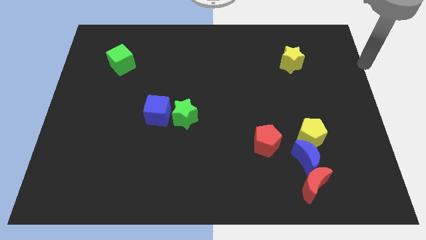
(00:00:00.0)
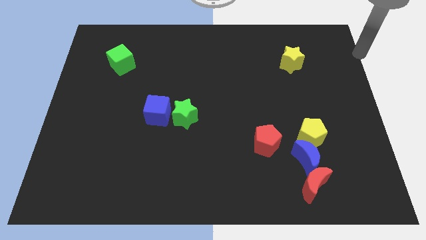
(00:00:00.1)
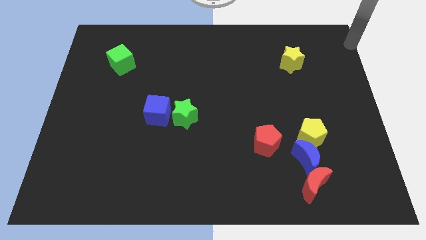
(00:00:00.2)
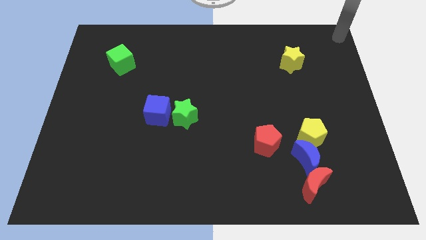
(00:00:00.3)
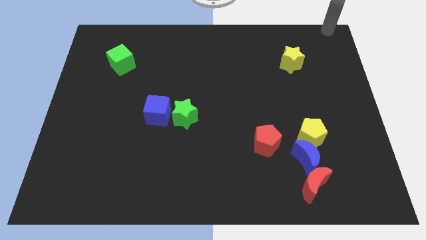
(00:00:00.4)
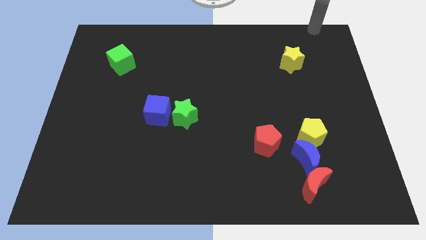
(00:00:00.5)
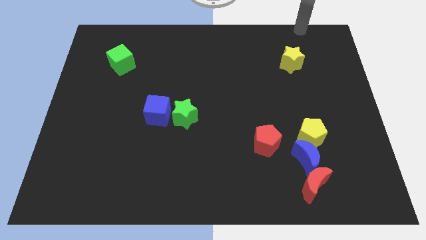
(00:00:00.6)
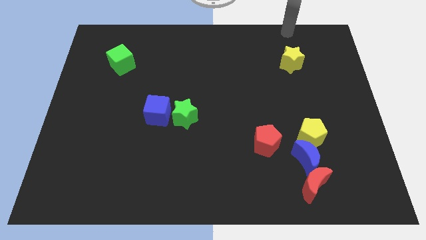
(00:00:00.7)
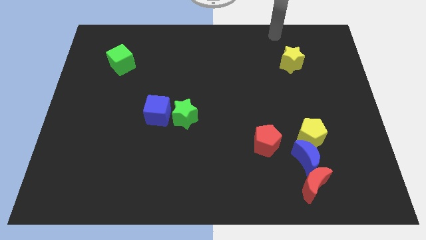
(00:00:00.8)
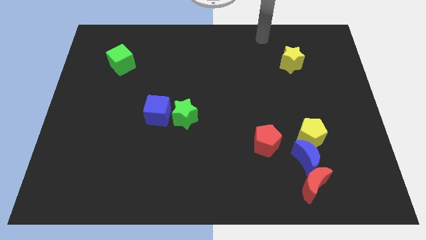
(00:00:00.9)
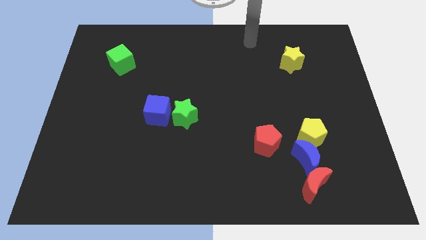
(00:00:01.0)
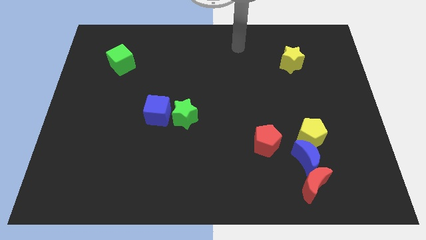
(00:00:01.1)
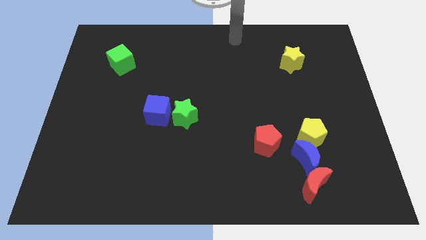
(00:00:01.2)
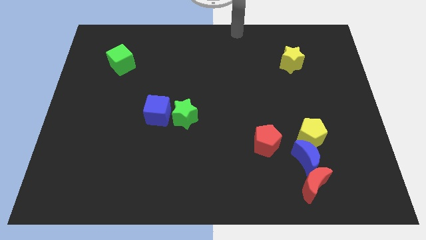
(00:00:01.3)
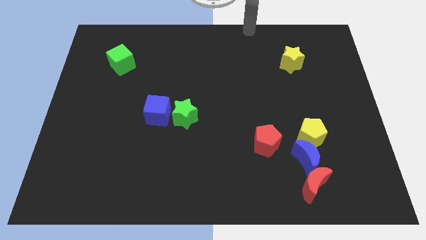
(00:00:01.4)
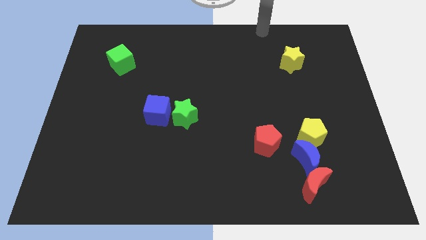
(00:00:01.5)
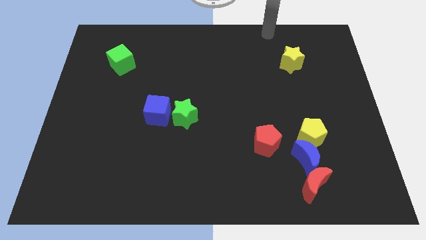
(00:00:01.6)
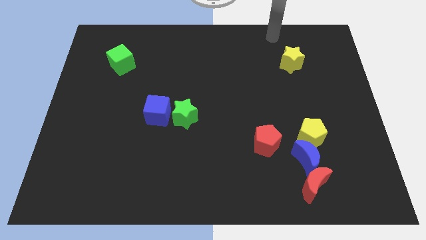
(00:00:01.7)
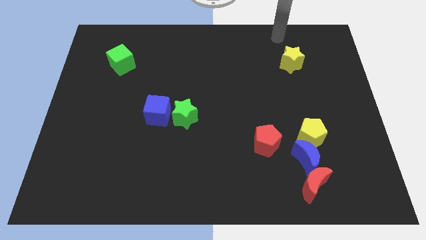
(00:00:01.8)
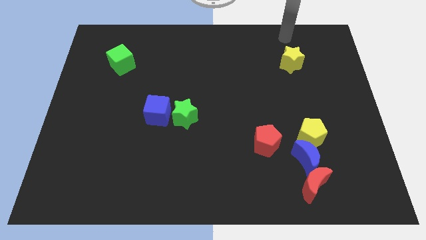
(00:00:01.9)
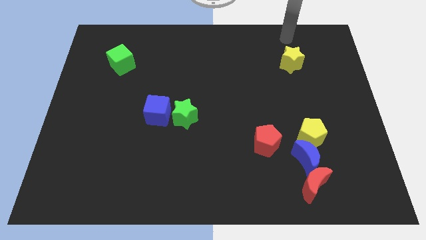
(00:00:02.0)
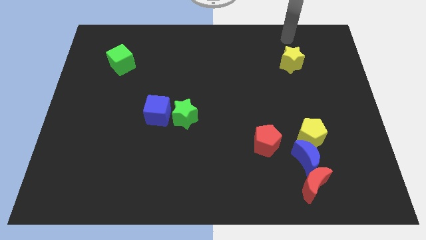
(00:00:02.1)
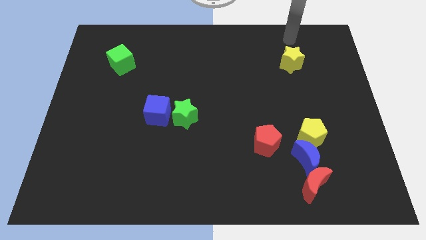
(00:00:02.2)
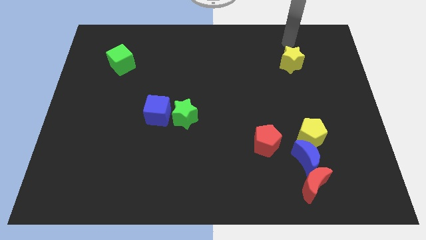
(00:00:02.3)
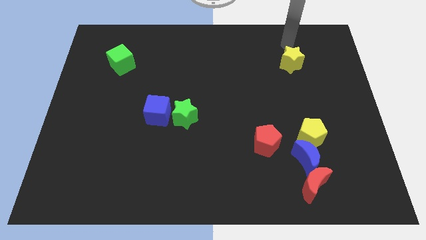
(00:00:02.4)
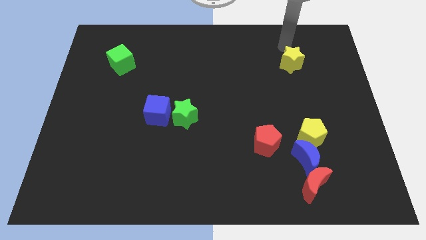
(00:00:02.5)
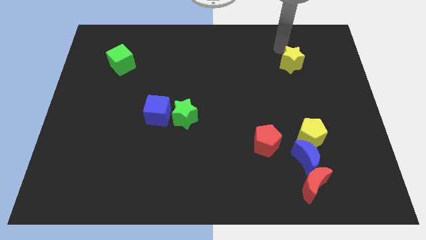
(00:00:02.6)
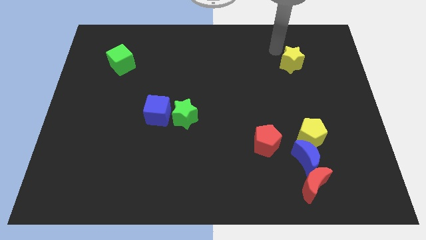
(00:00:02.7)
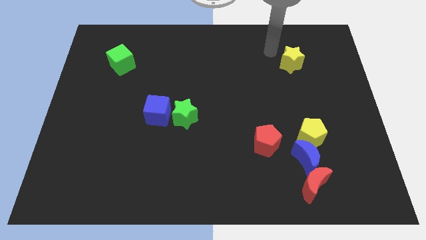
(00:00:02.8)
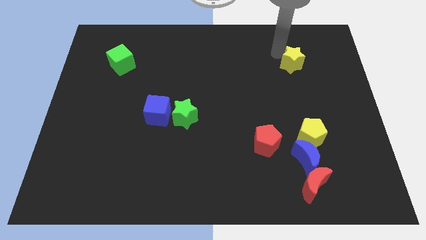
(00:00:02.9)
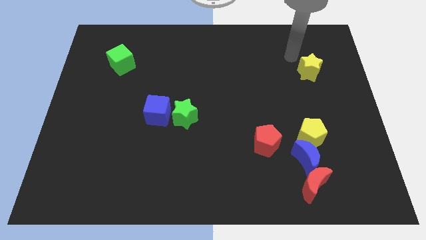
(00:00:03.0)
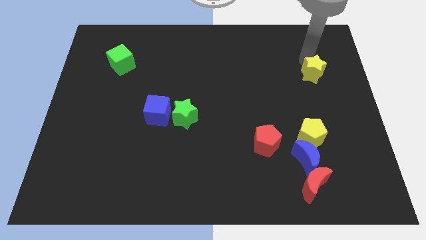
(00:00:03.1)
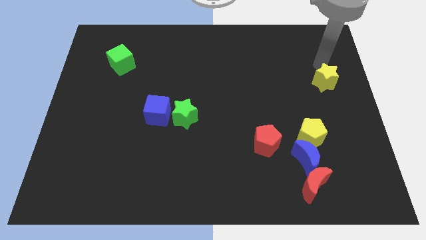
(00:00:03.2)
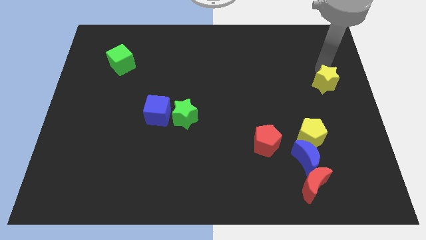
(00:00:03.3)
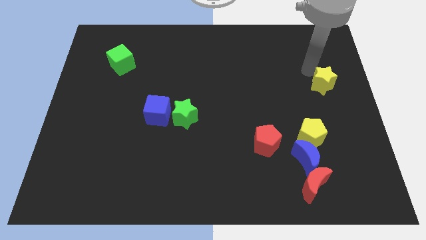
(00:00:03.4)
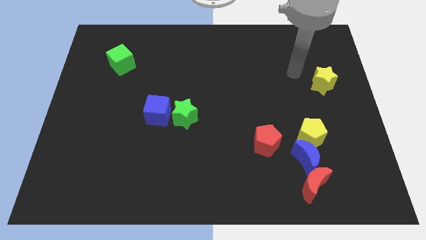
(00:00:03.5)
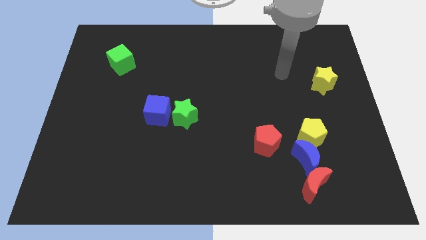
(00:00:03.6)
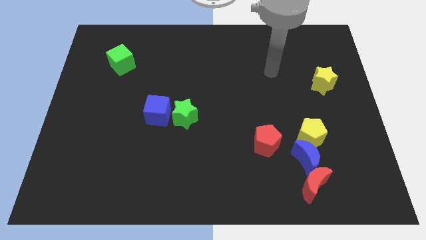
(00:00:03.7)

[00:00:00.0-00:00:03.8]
push the yellow star diagonally at the top right of the red pentagon

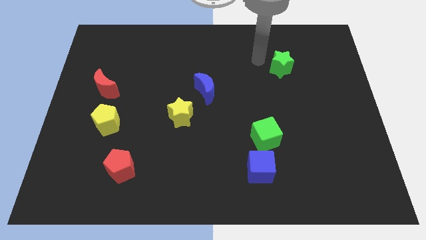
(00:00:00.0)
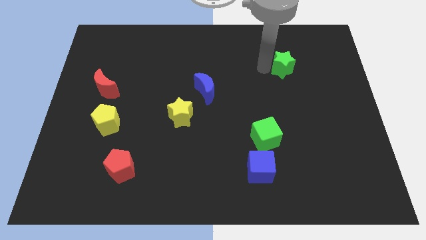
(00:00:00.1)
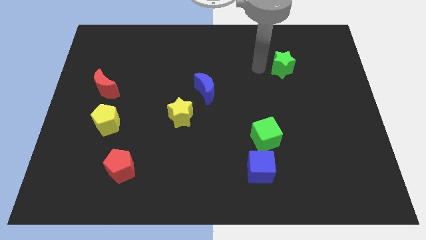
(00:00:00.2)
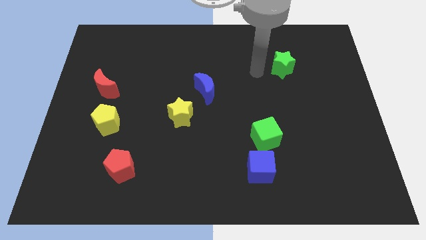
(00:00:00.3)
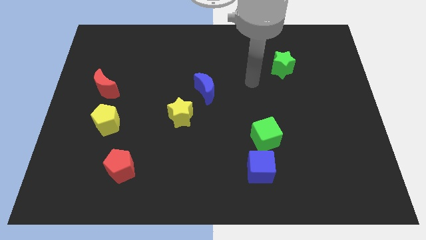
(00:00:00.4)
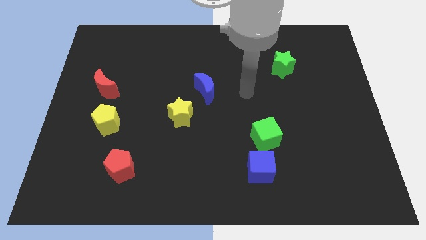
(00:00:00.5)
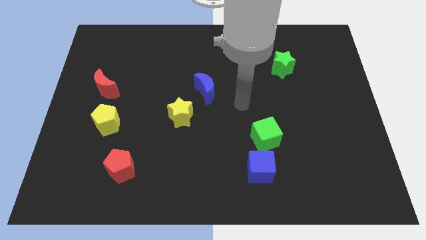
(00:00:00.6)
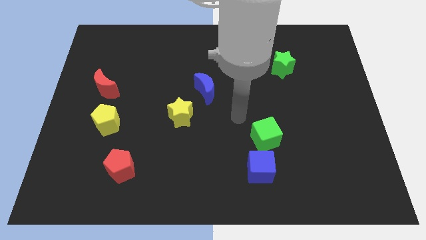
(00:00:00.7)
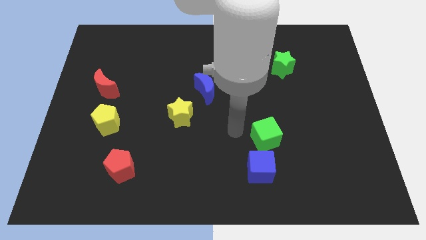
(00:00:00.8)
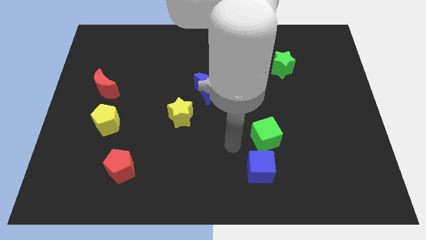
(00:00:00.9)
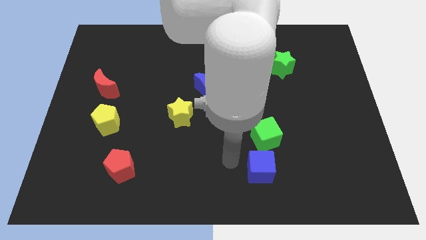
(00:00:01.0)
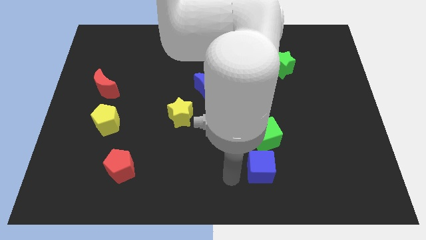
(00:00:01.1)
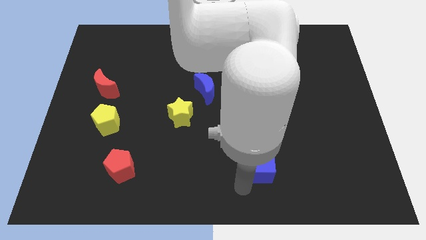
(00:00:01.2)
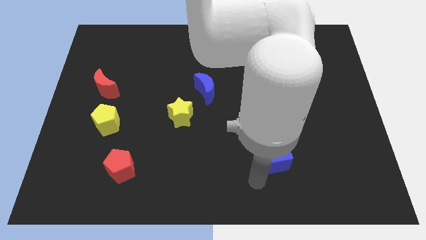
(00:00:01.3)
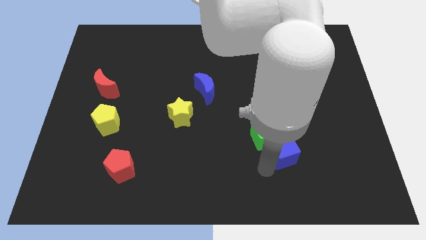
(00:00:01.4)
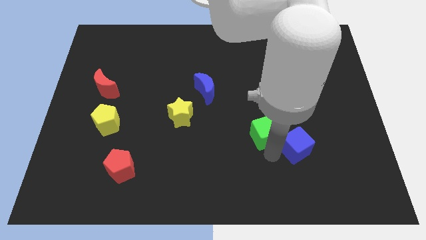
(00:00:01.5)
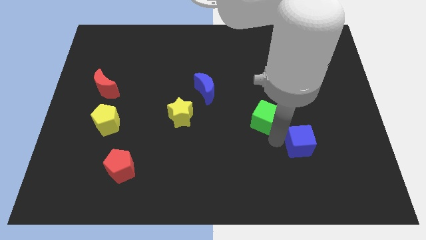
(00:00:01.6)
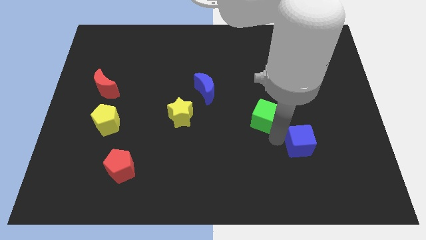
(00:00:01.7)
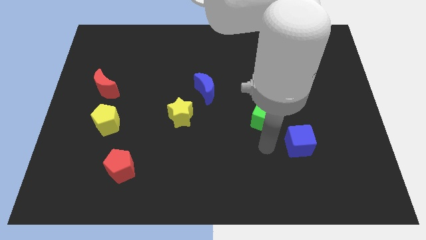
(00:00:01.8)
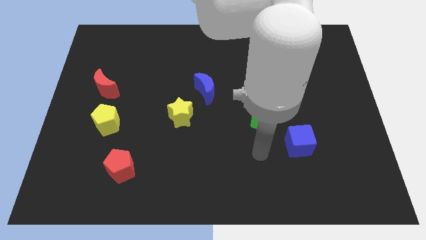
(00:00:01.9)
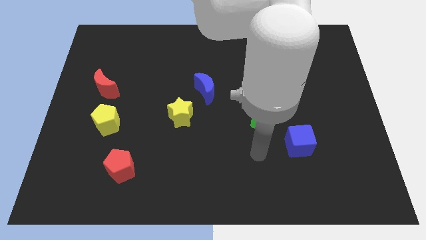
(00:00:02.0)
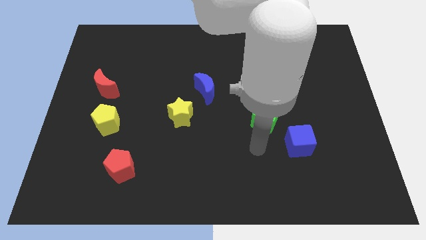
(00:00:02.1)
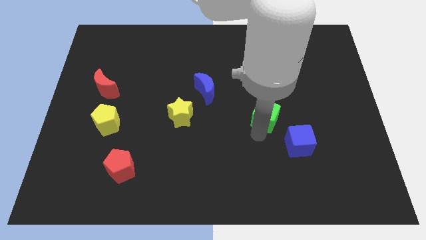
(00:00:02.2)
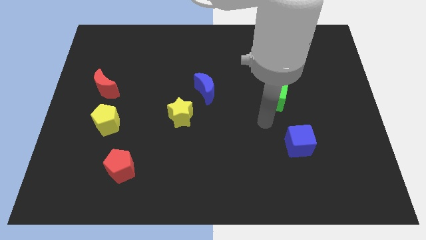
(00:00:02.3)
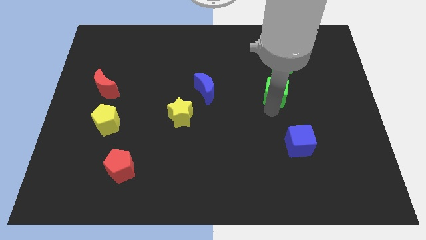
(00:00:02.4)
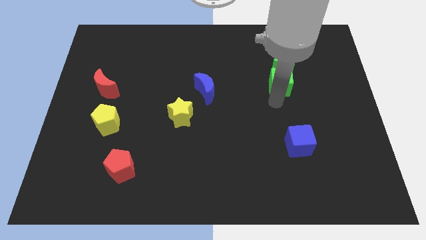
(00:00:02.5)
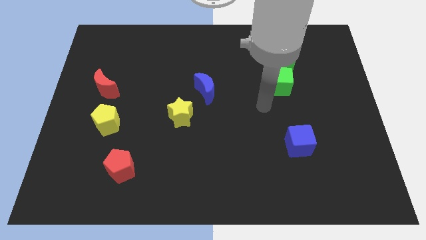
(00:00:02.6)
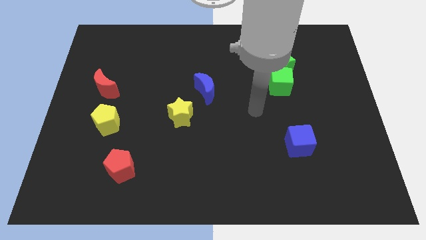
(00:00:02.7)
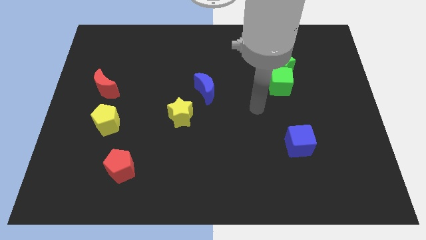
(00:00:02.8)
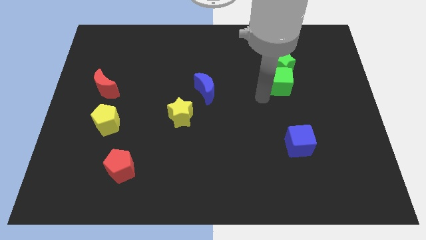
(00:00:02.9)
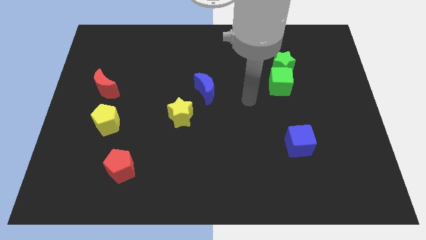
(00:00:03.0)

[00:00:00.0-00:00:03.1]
go and place the green cube below the green star

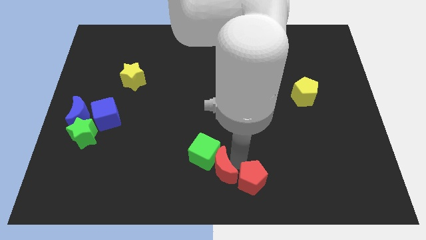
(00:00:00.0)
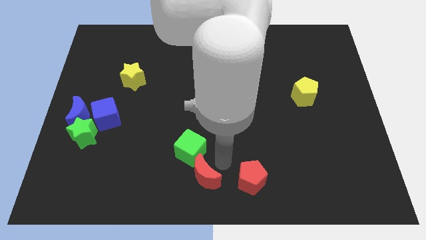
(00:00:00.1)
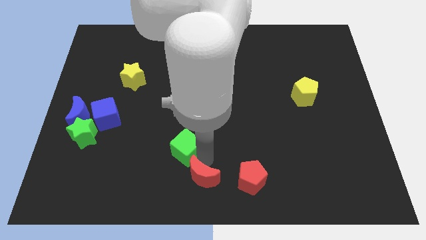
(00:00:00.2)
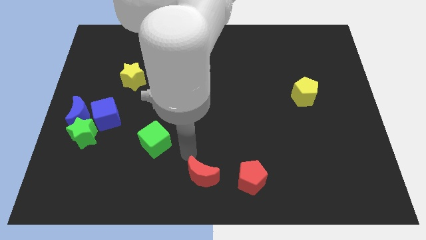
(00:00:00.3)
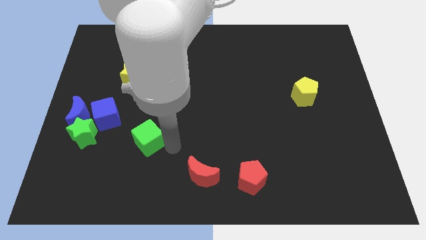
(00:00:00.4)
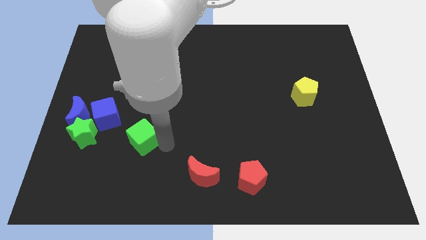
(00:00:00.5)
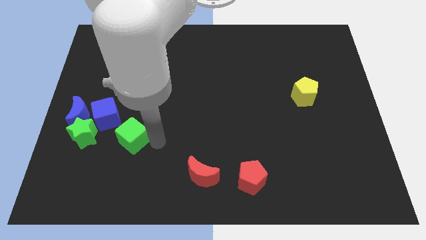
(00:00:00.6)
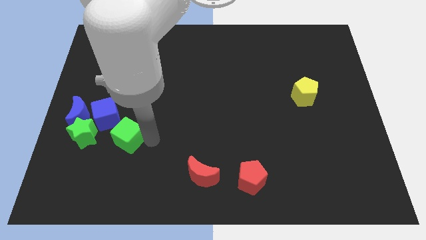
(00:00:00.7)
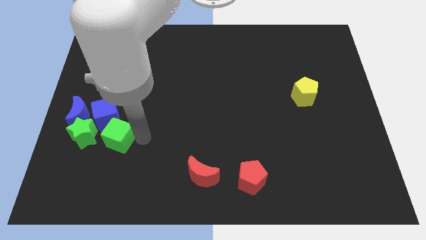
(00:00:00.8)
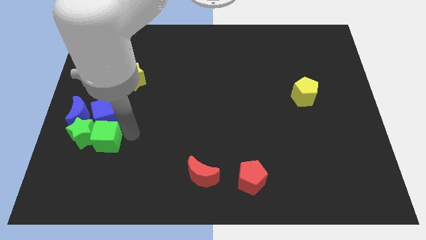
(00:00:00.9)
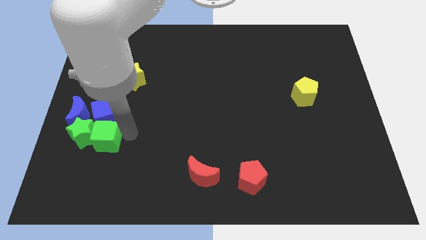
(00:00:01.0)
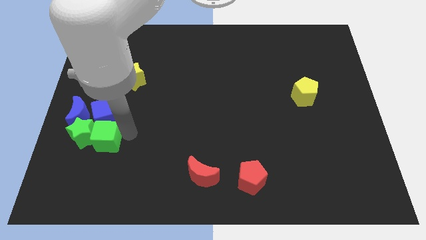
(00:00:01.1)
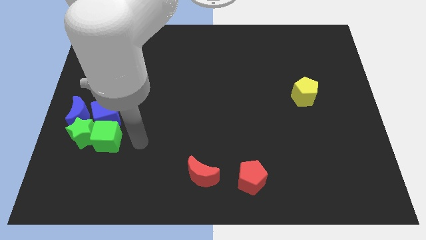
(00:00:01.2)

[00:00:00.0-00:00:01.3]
push the green cube into the green star

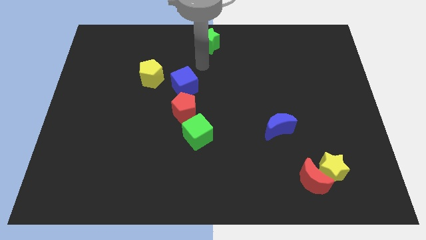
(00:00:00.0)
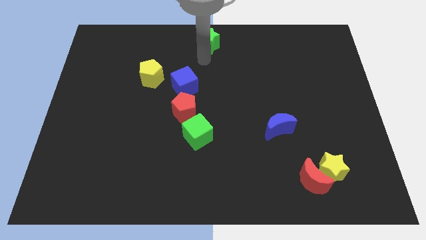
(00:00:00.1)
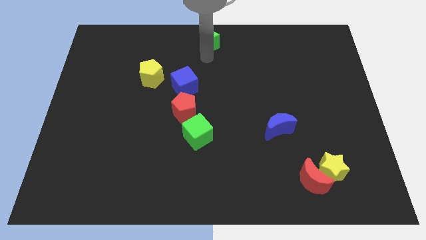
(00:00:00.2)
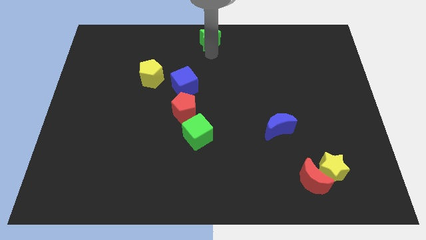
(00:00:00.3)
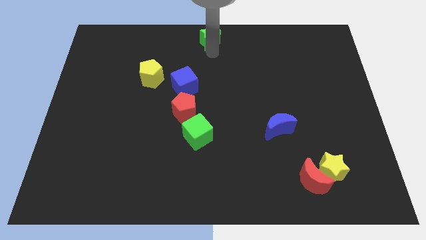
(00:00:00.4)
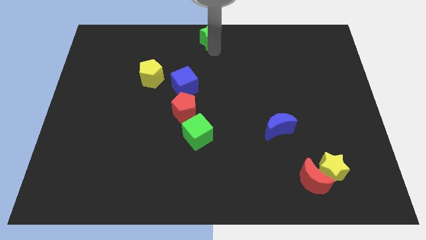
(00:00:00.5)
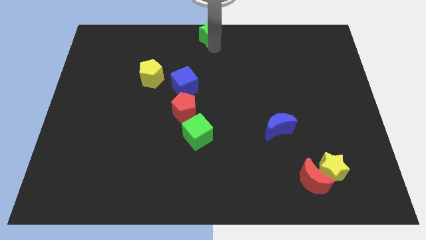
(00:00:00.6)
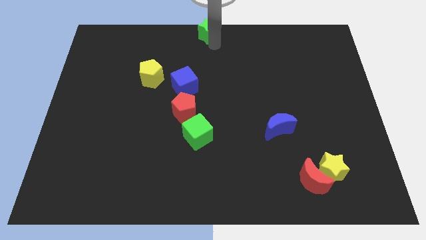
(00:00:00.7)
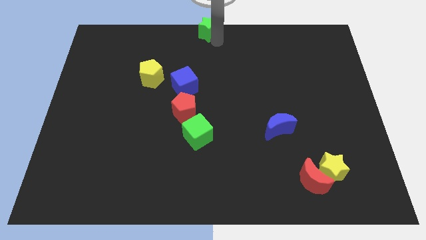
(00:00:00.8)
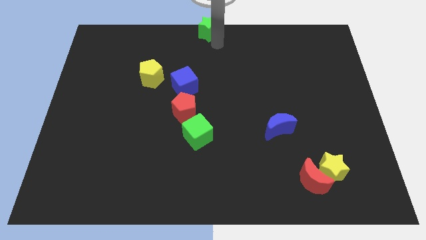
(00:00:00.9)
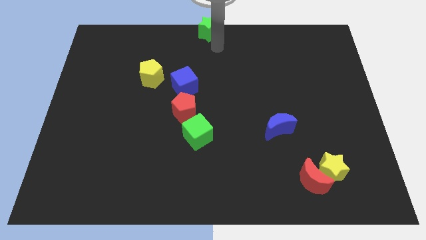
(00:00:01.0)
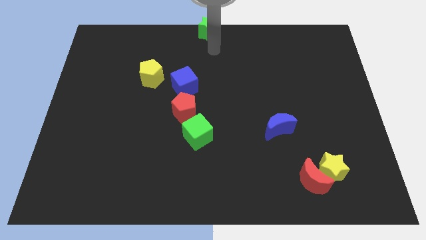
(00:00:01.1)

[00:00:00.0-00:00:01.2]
place the green star at top center of the board
